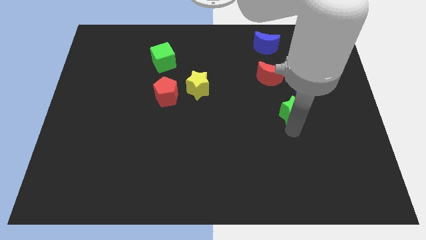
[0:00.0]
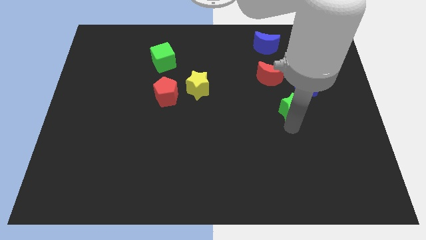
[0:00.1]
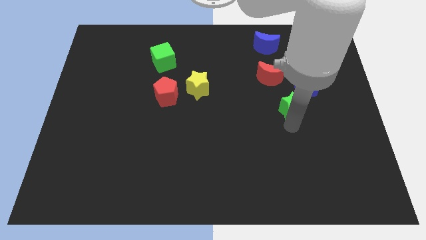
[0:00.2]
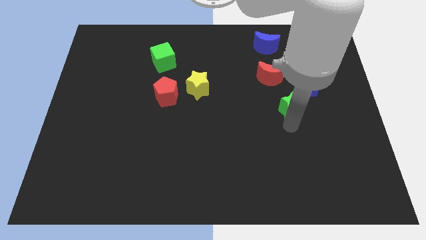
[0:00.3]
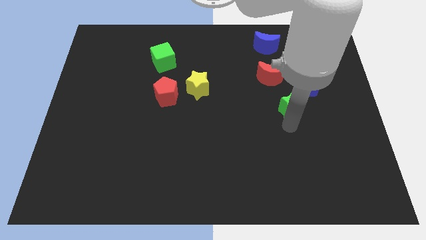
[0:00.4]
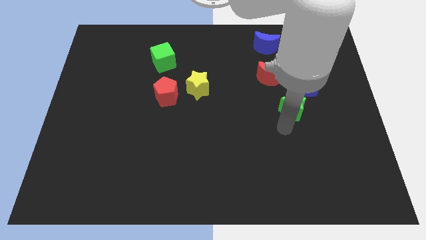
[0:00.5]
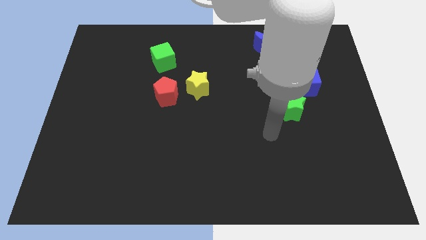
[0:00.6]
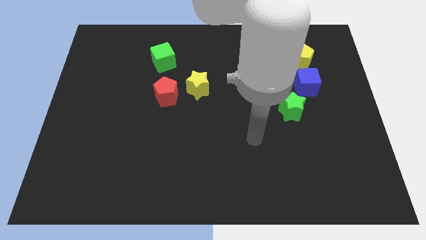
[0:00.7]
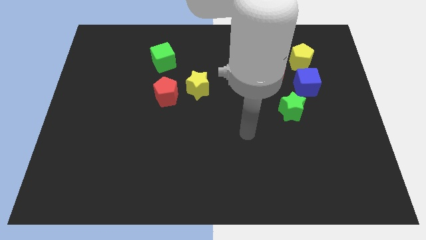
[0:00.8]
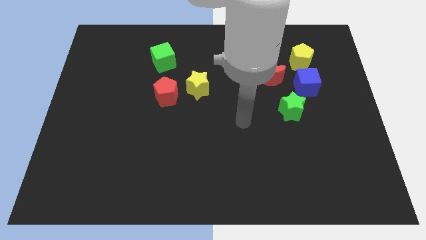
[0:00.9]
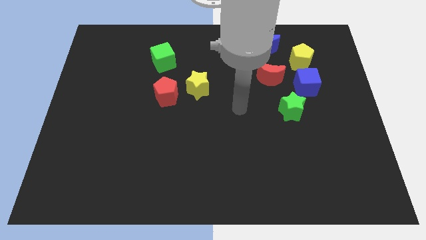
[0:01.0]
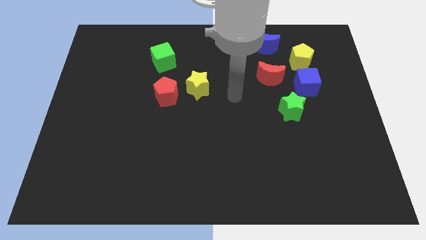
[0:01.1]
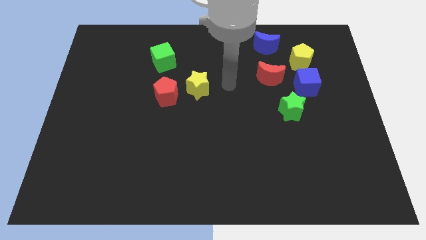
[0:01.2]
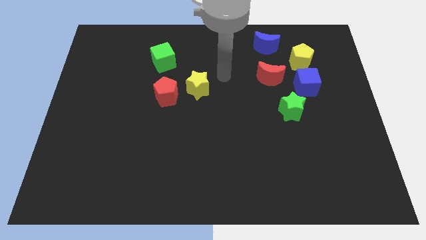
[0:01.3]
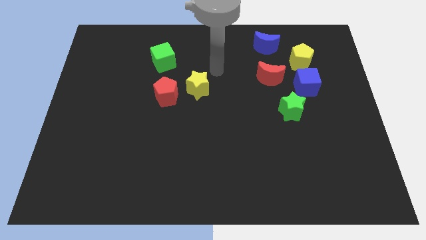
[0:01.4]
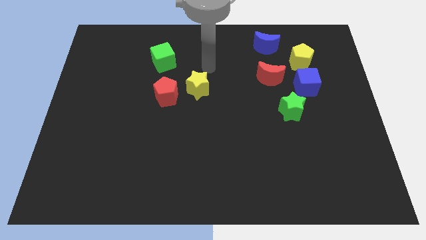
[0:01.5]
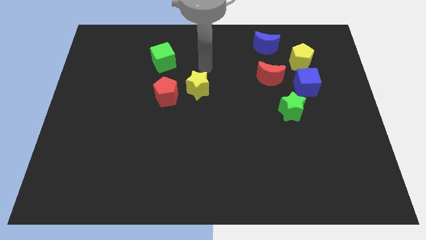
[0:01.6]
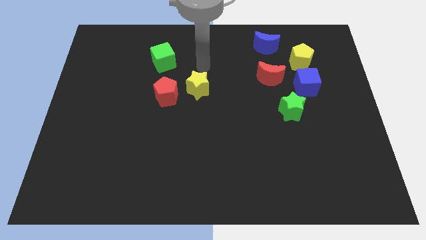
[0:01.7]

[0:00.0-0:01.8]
place the green star at the bottom left of the blue cube

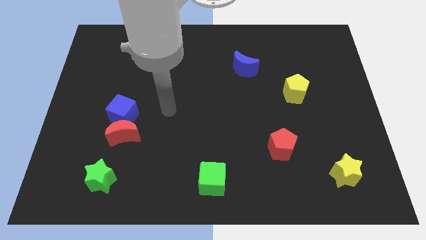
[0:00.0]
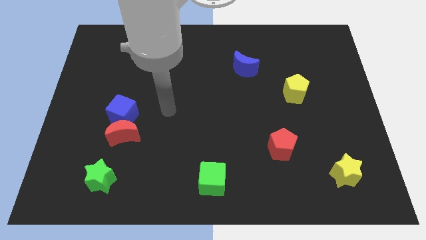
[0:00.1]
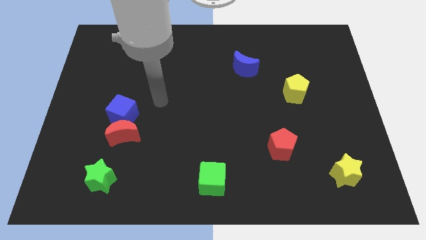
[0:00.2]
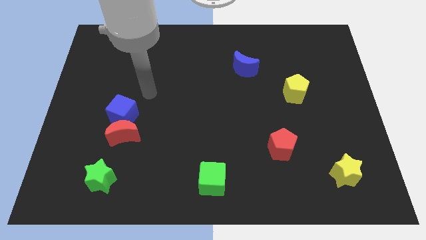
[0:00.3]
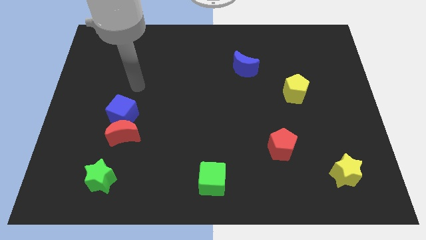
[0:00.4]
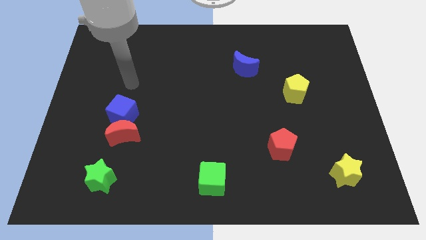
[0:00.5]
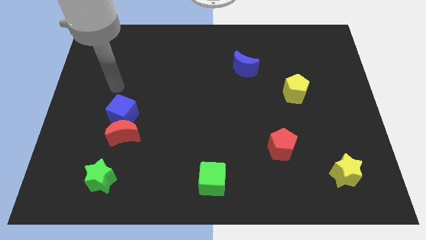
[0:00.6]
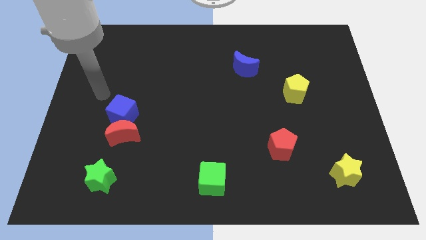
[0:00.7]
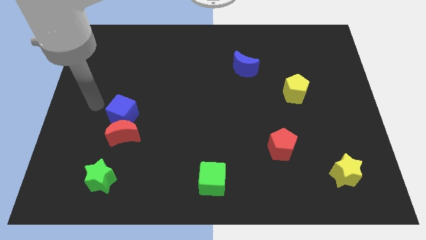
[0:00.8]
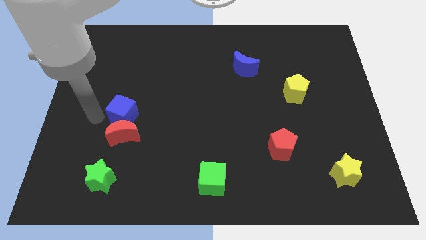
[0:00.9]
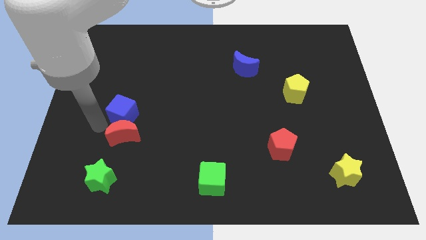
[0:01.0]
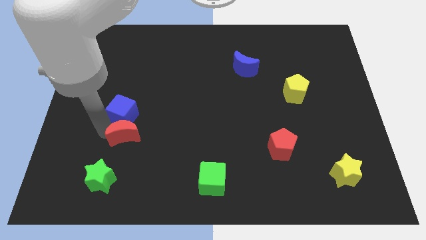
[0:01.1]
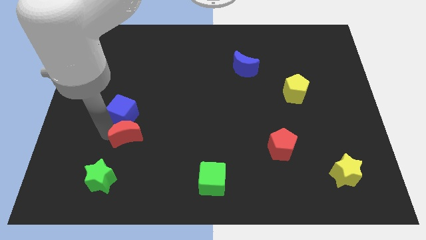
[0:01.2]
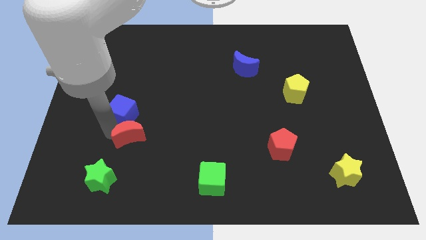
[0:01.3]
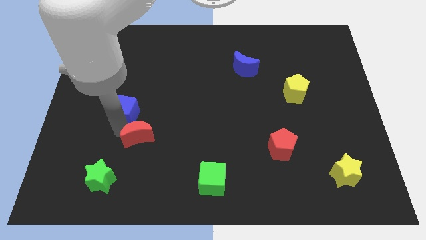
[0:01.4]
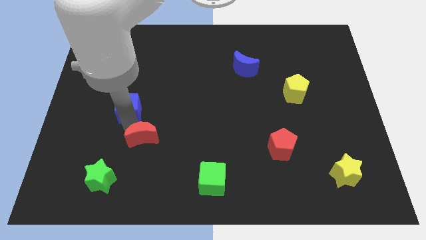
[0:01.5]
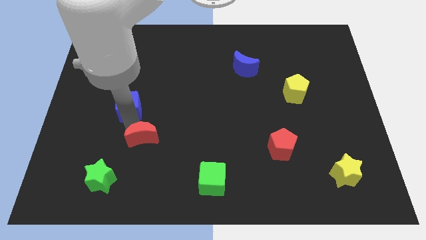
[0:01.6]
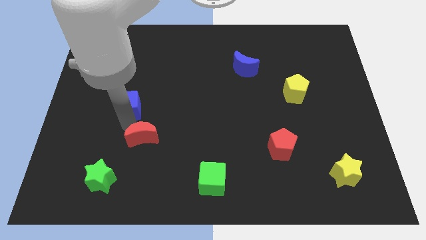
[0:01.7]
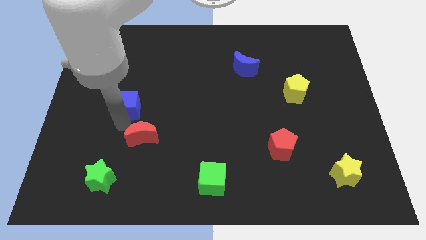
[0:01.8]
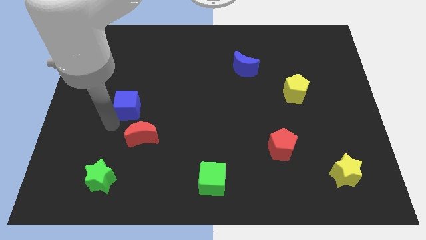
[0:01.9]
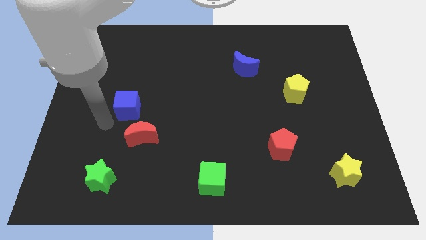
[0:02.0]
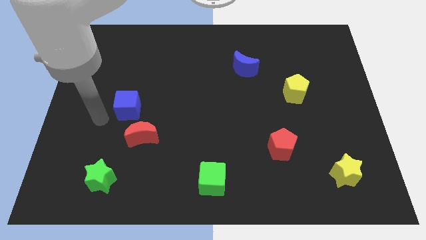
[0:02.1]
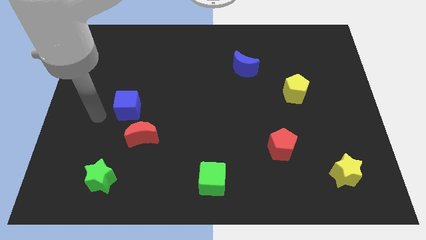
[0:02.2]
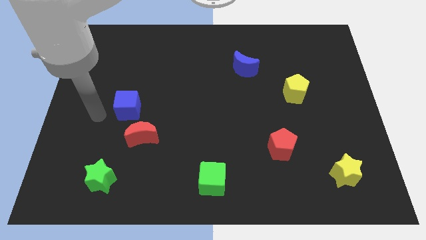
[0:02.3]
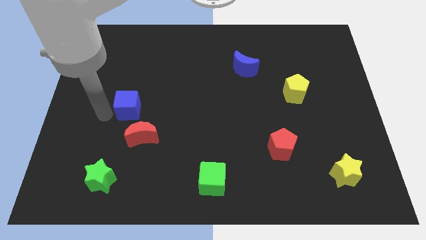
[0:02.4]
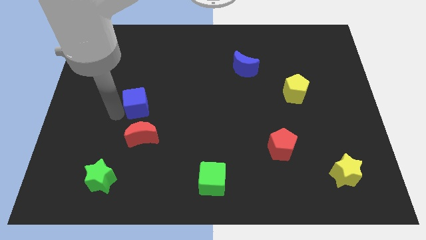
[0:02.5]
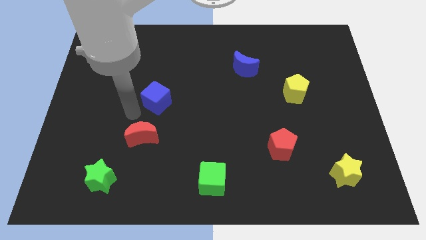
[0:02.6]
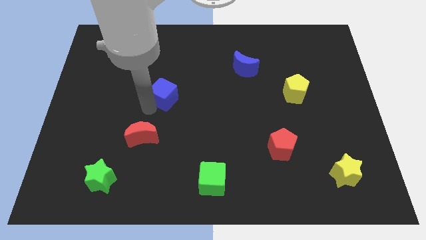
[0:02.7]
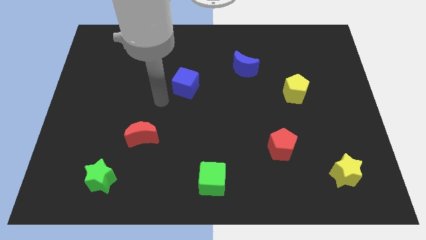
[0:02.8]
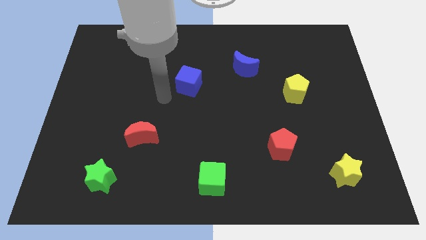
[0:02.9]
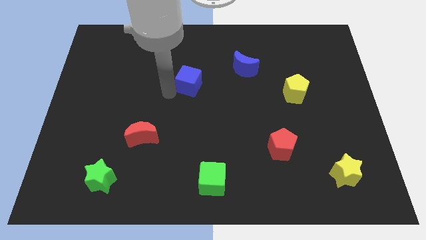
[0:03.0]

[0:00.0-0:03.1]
push the blue cube to the top right of the red crescent

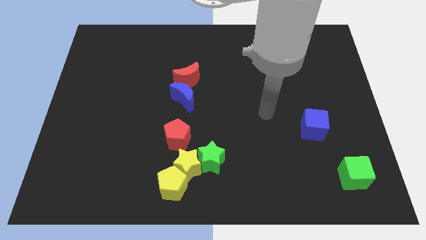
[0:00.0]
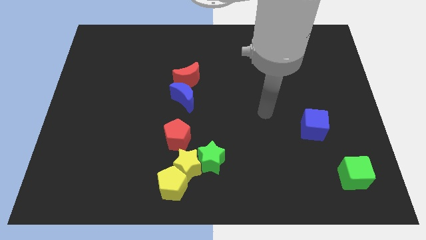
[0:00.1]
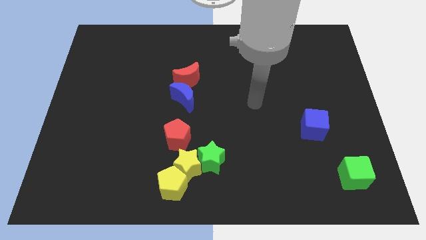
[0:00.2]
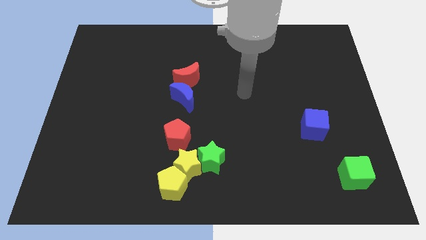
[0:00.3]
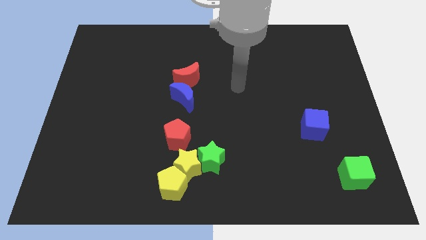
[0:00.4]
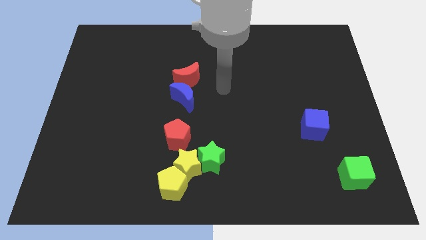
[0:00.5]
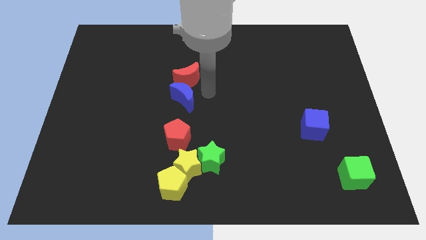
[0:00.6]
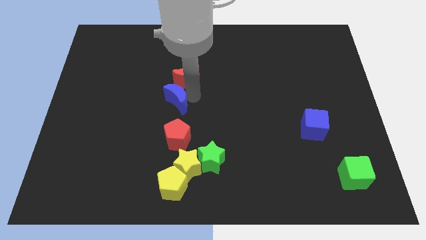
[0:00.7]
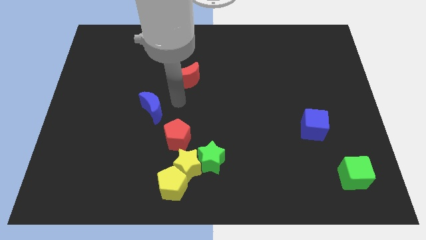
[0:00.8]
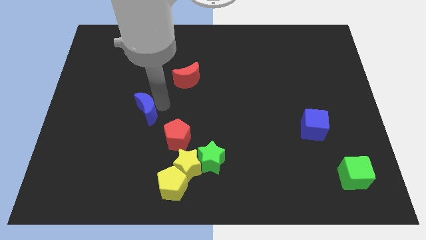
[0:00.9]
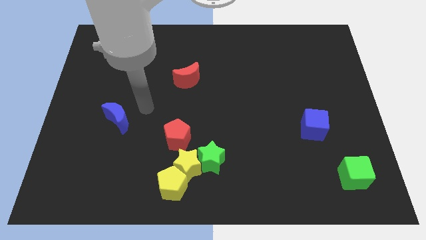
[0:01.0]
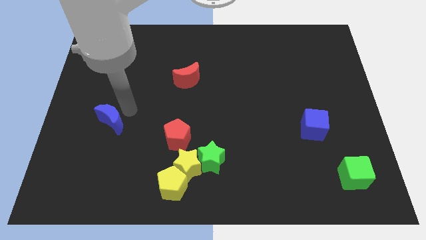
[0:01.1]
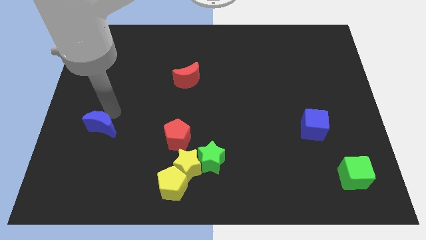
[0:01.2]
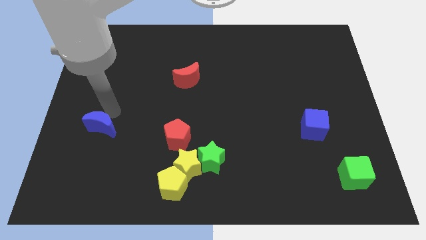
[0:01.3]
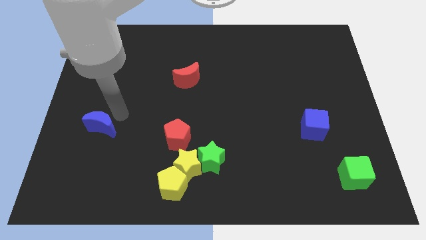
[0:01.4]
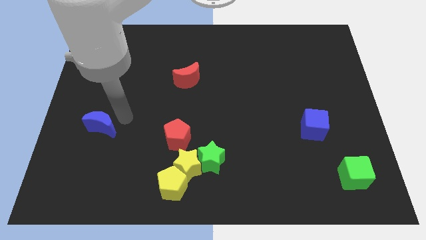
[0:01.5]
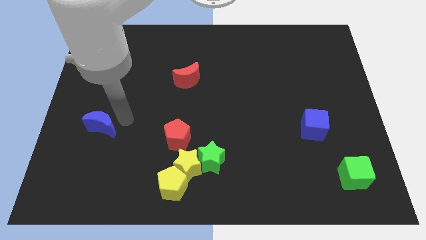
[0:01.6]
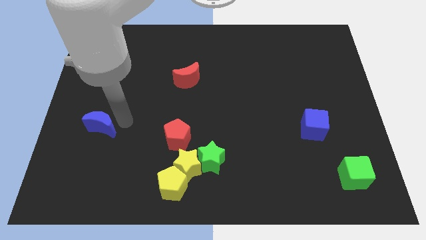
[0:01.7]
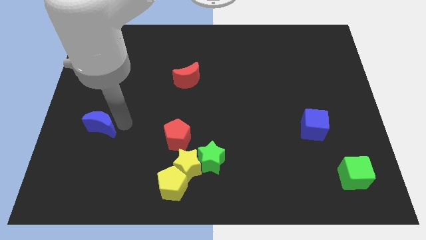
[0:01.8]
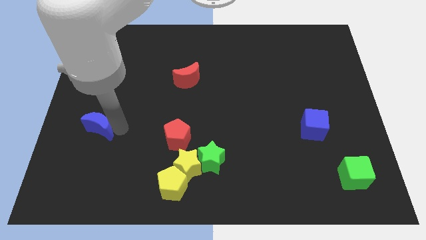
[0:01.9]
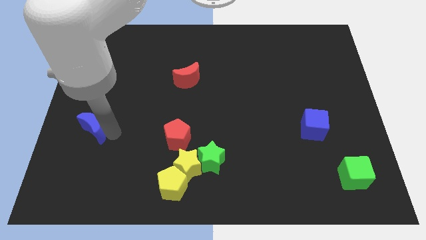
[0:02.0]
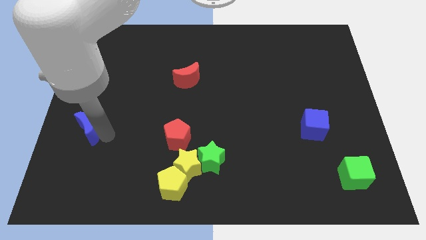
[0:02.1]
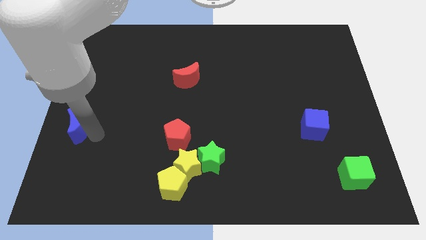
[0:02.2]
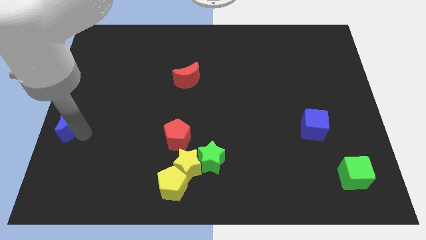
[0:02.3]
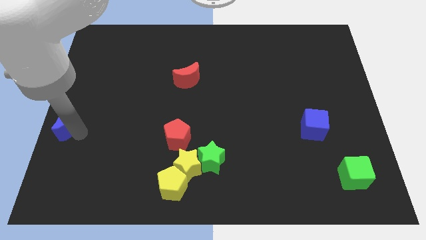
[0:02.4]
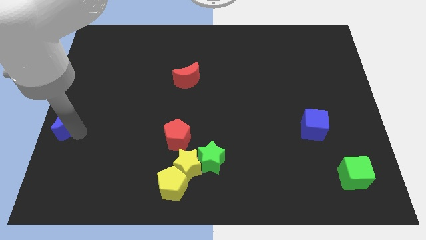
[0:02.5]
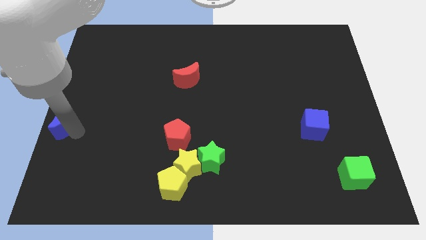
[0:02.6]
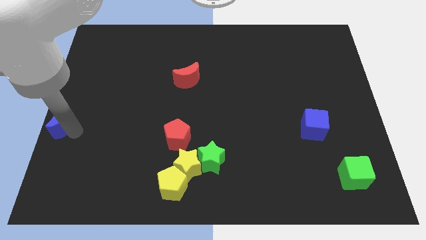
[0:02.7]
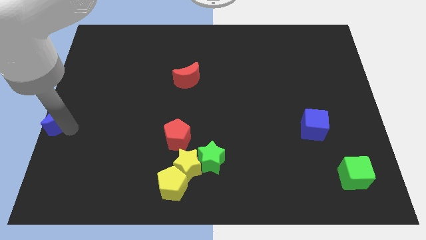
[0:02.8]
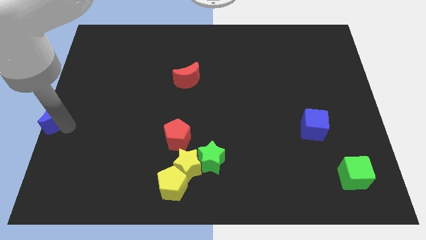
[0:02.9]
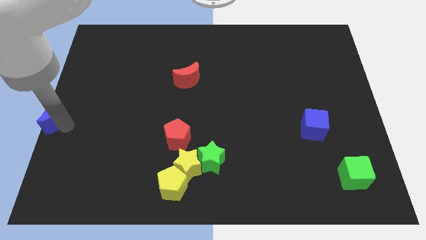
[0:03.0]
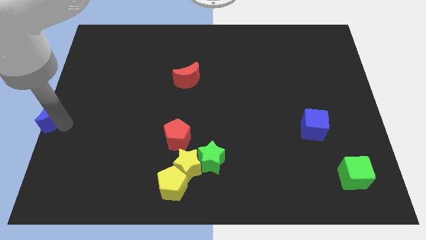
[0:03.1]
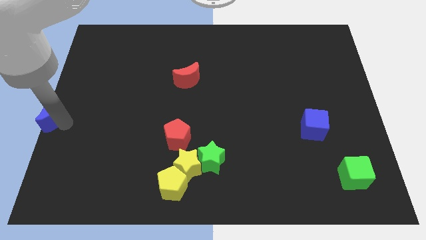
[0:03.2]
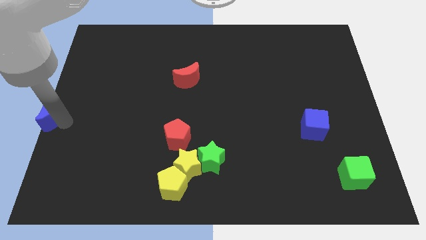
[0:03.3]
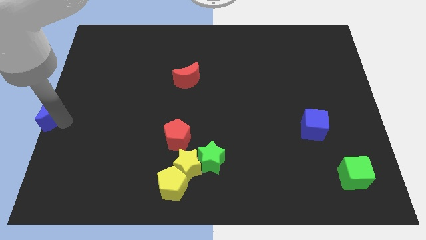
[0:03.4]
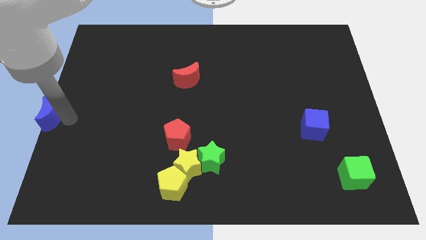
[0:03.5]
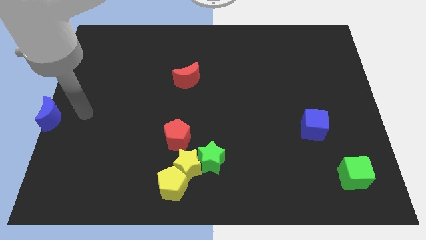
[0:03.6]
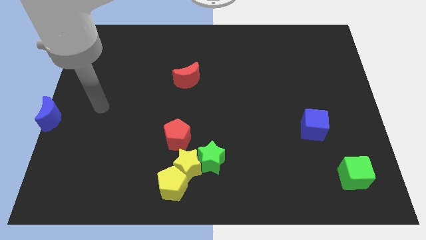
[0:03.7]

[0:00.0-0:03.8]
place blue moon to the left center of the board

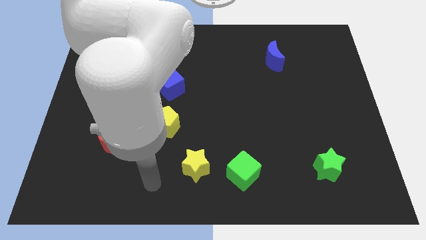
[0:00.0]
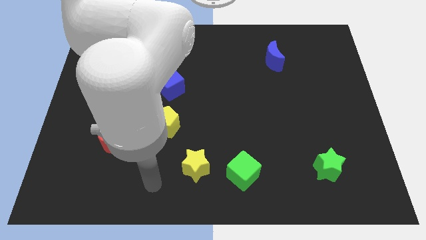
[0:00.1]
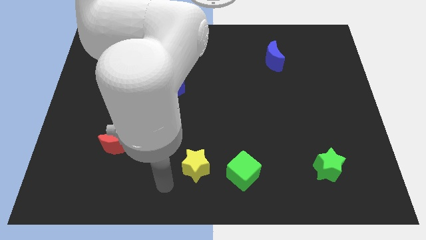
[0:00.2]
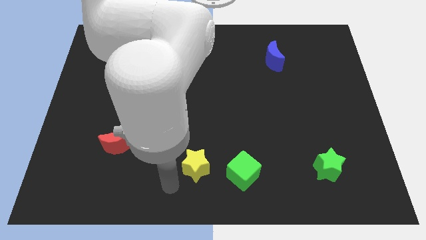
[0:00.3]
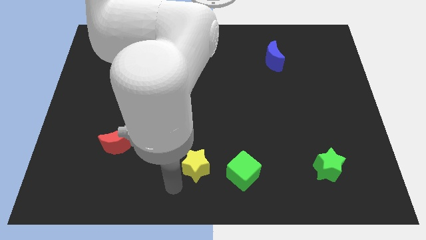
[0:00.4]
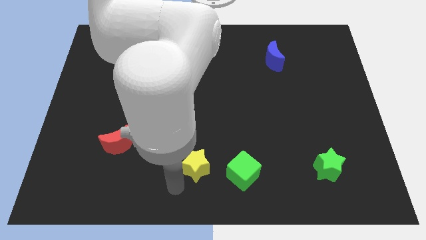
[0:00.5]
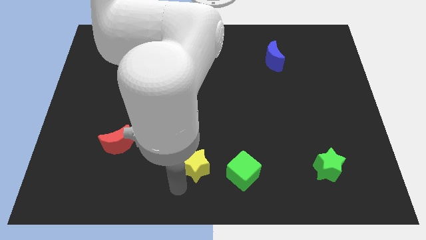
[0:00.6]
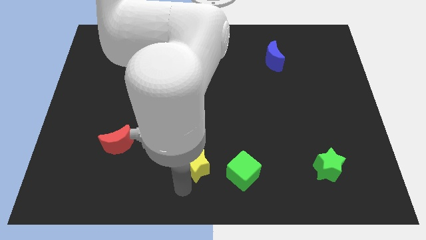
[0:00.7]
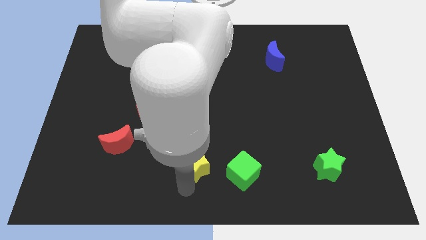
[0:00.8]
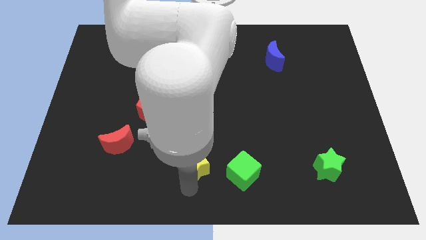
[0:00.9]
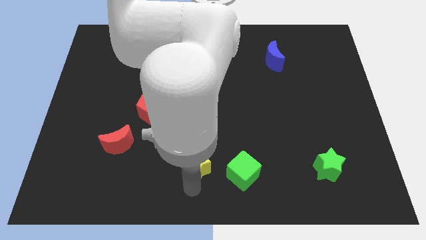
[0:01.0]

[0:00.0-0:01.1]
move your arm to the bottom of the yellow star
